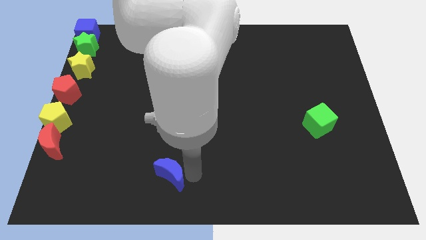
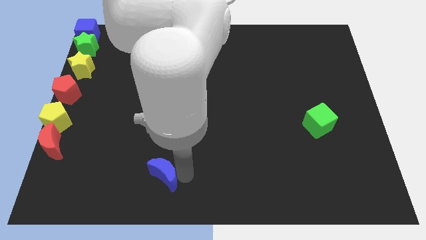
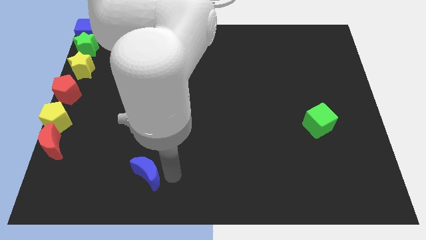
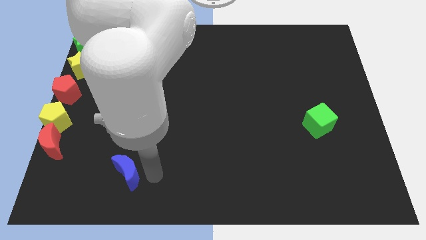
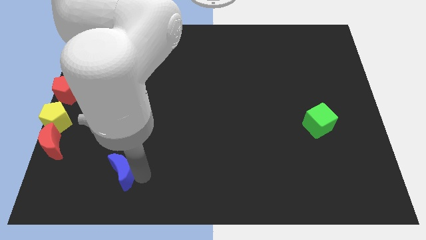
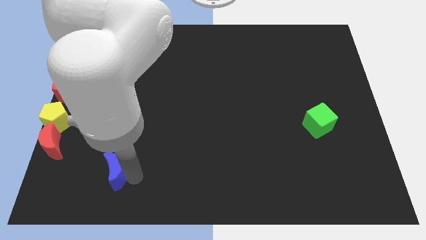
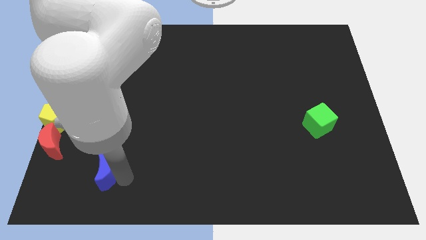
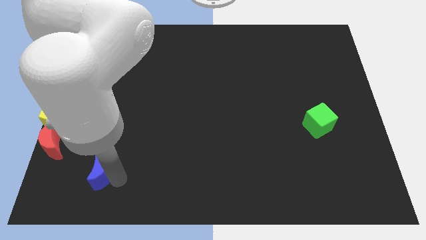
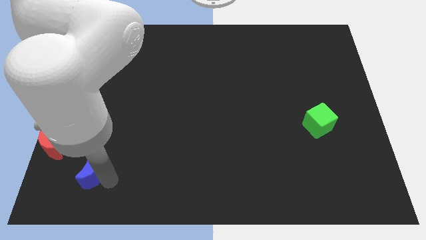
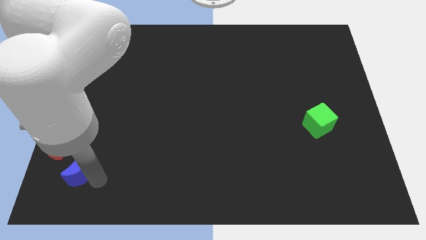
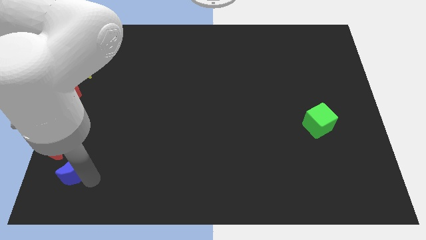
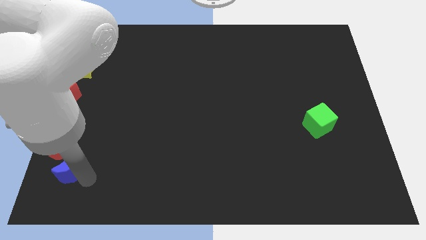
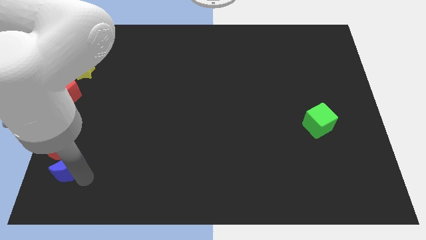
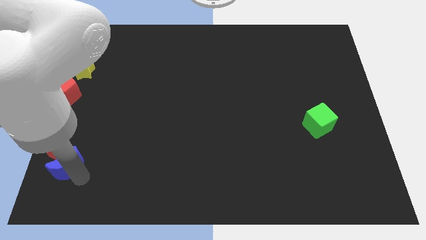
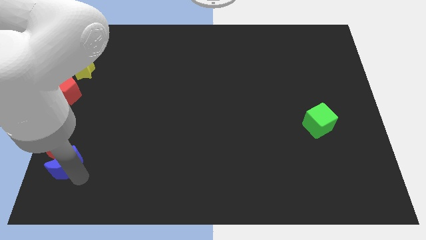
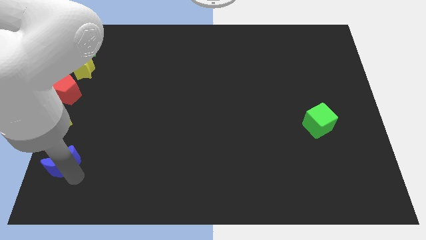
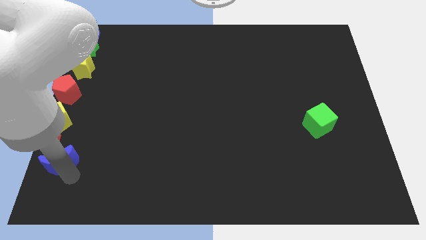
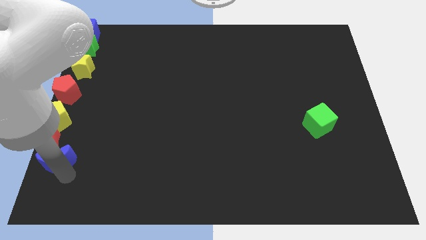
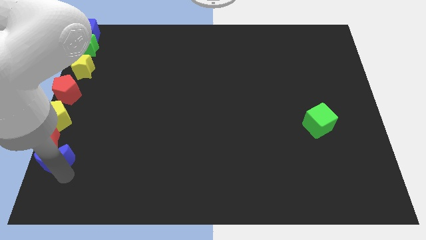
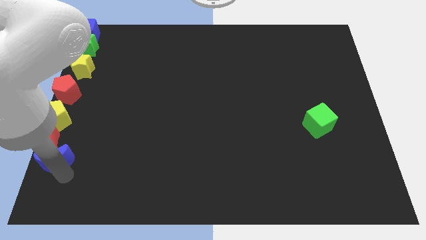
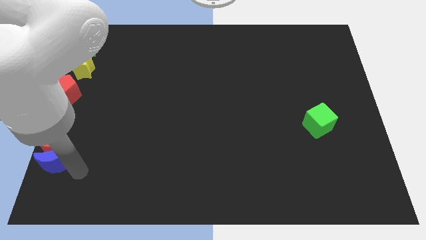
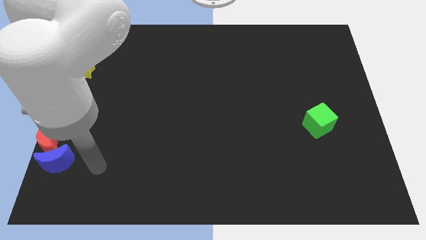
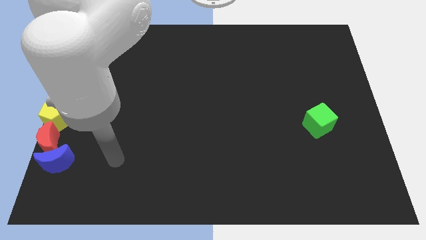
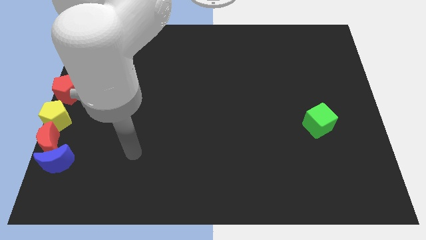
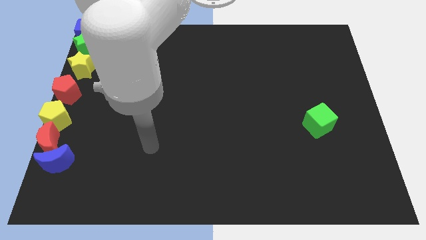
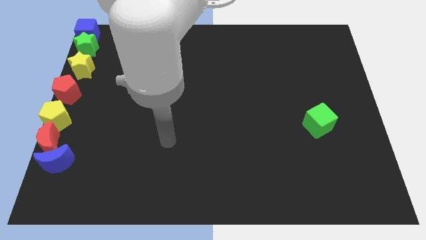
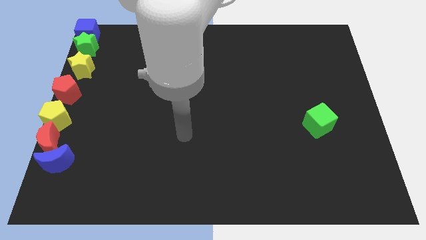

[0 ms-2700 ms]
move the blue moon below the red moon

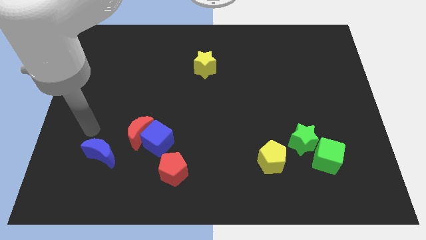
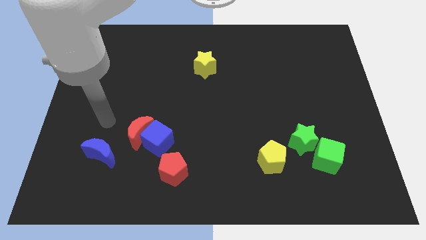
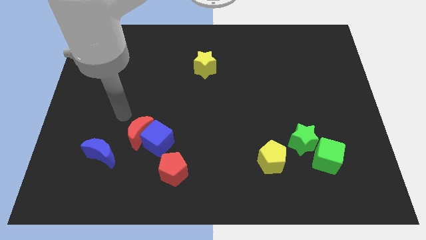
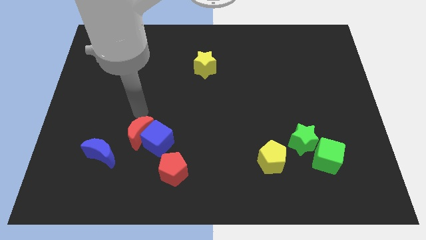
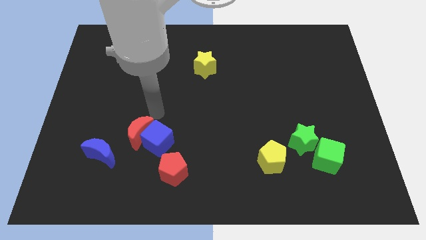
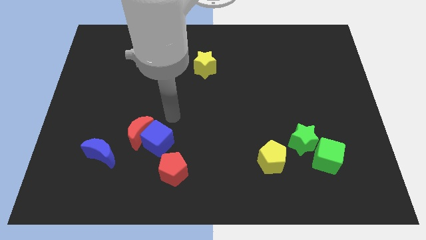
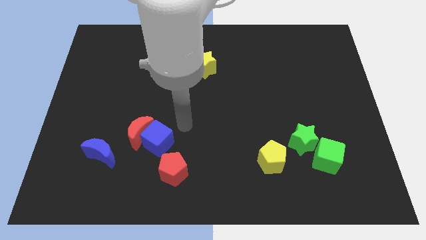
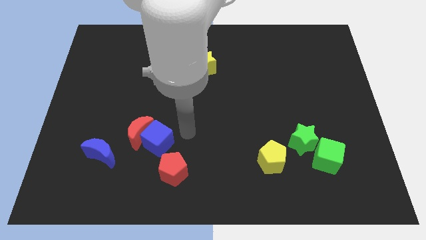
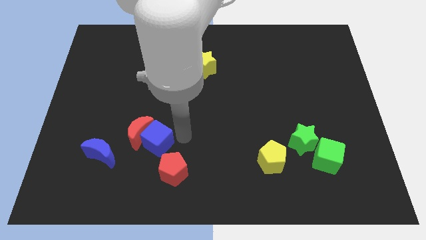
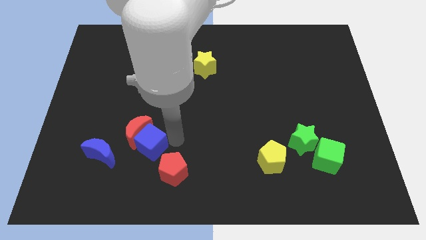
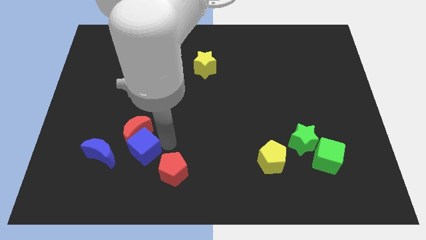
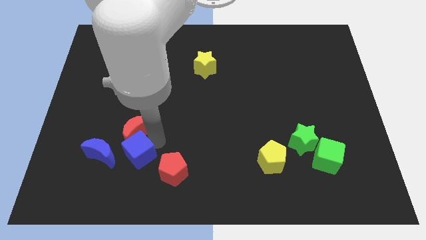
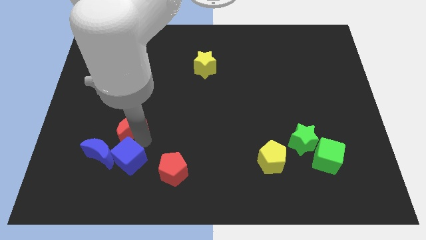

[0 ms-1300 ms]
push the blue cube into the blue crescent

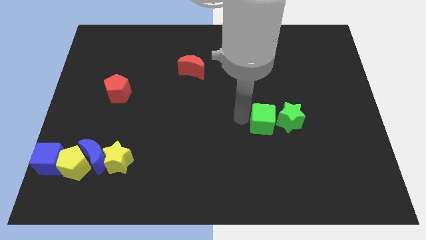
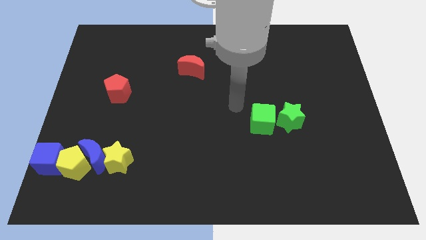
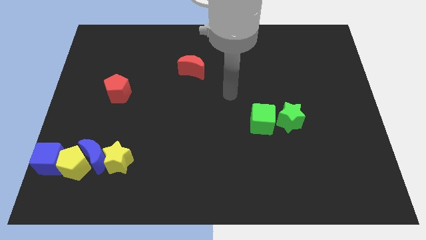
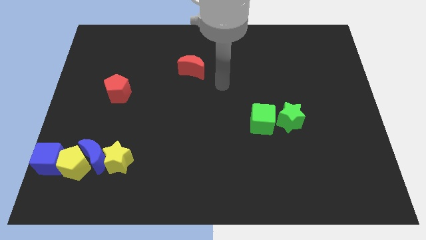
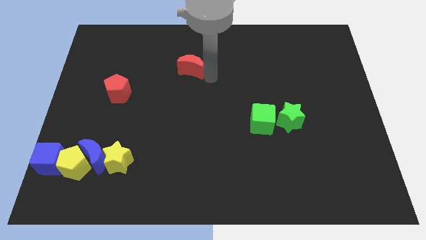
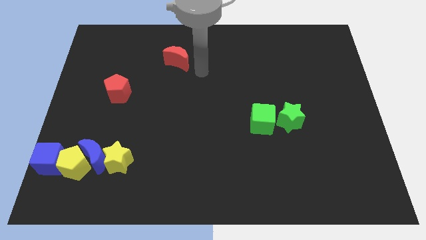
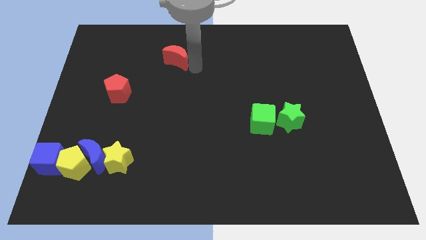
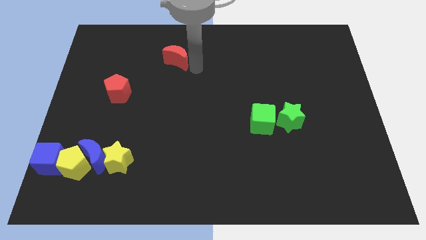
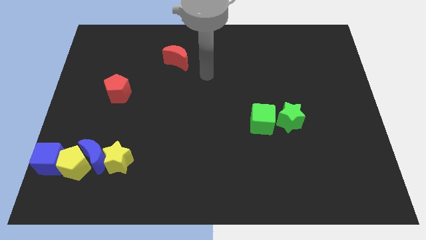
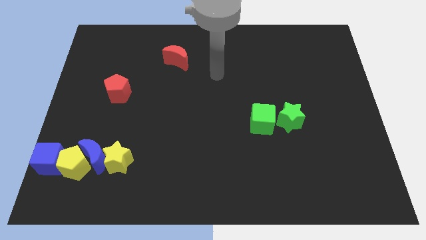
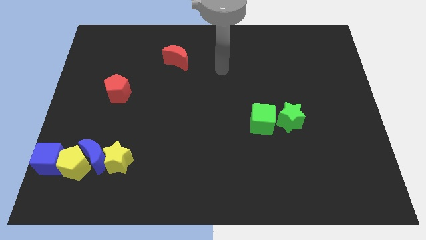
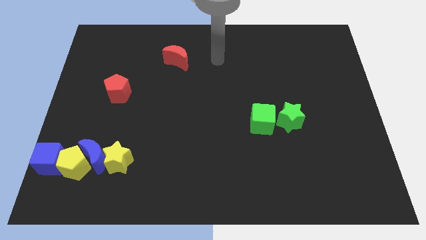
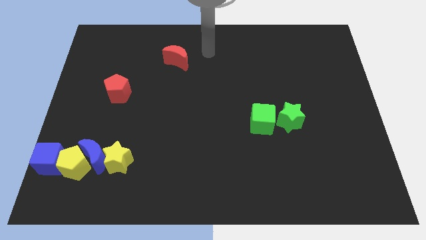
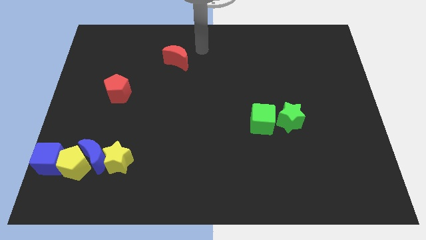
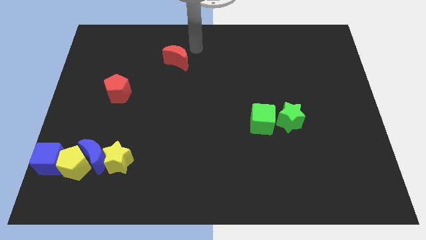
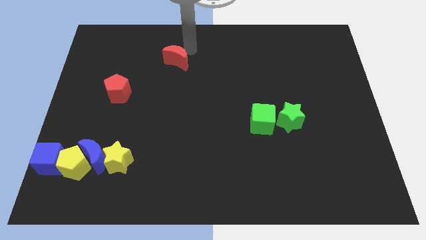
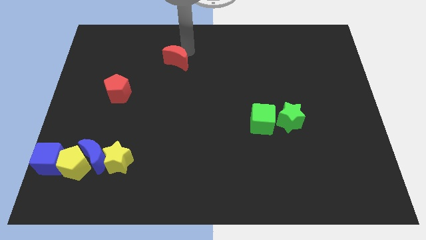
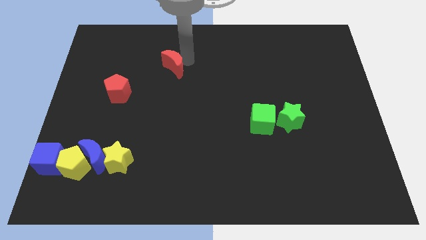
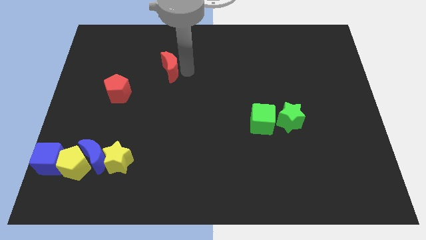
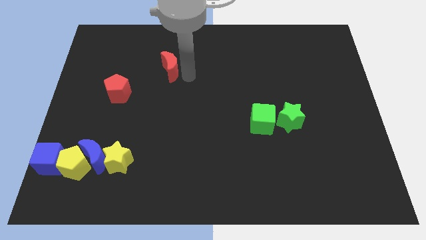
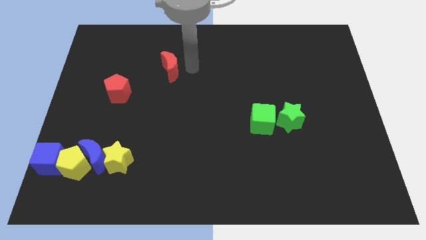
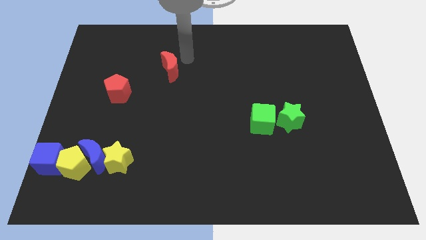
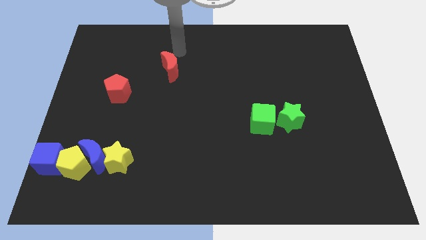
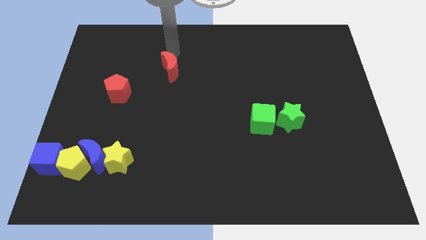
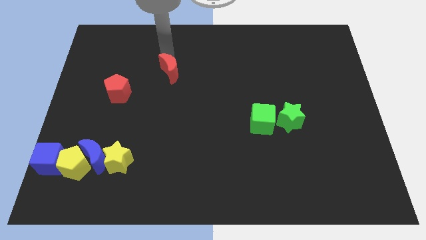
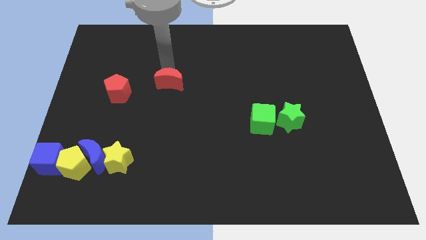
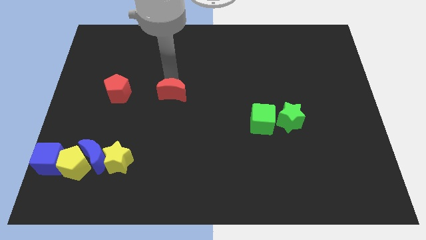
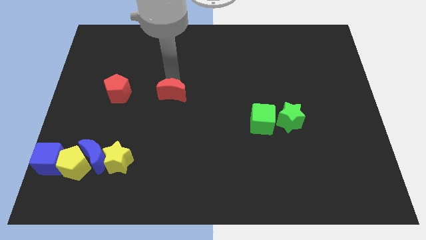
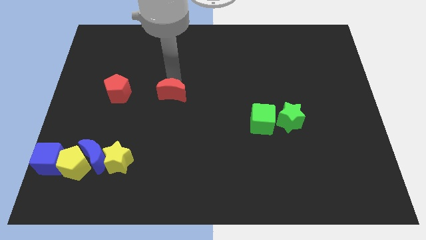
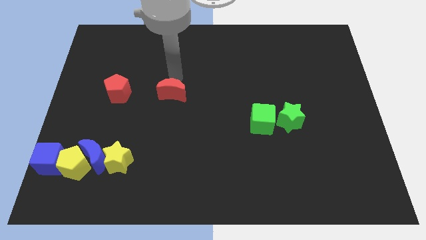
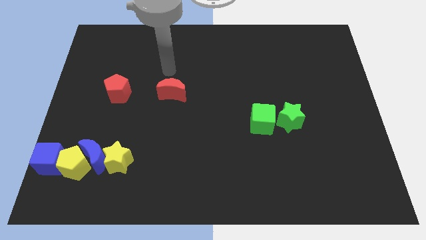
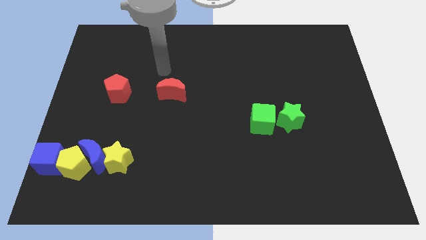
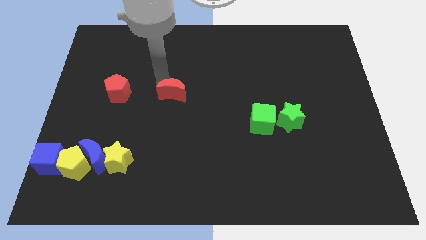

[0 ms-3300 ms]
place red moon parallel to red pentagon

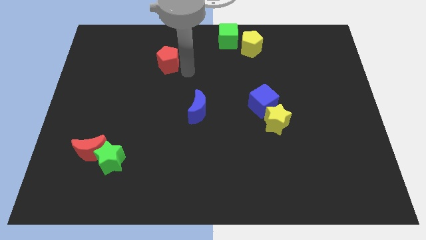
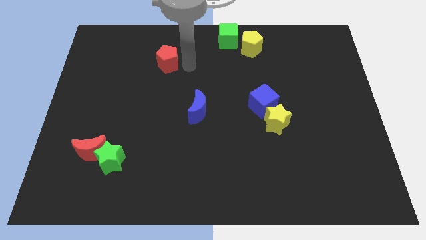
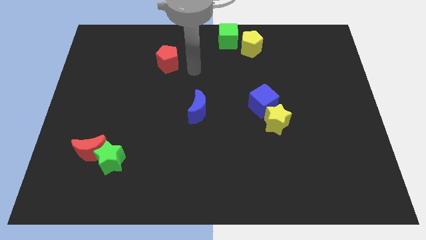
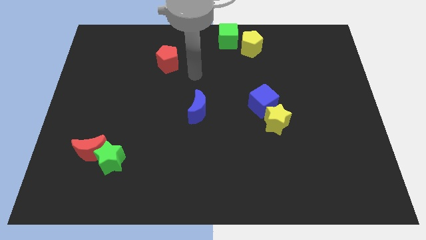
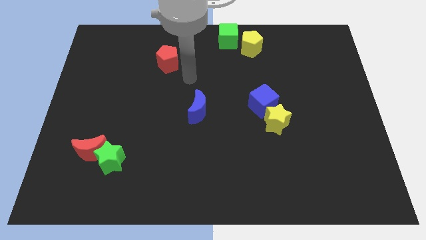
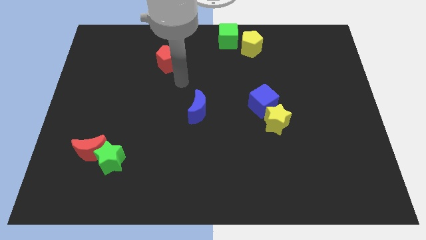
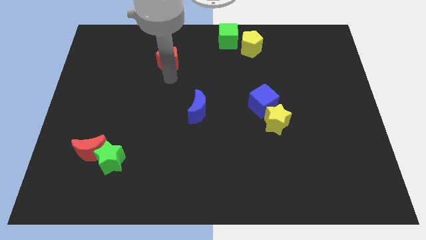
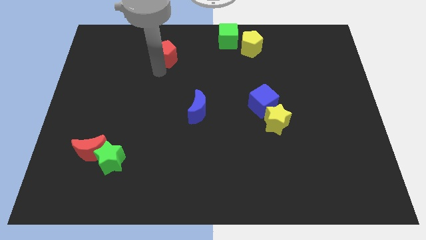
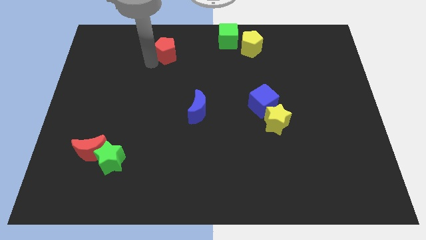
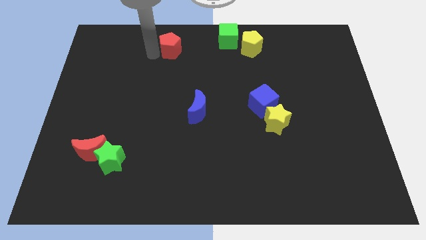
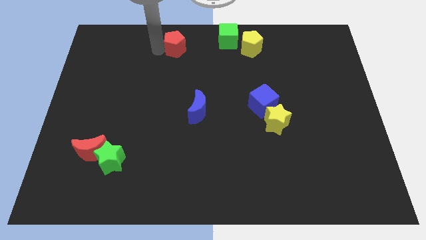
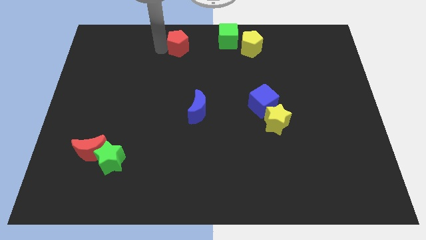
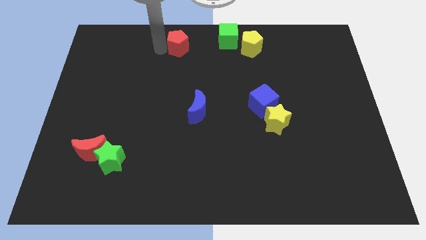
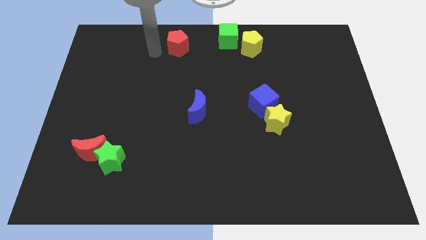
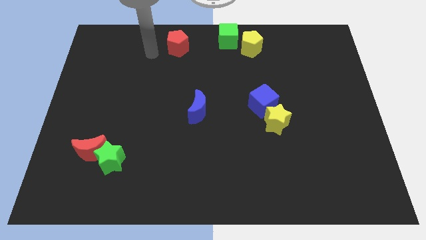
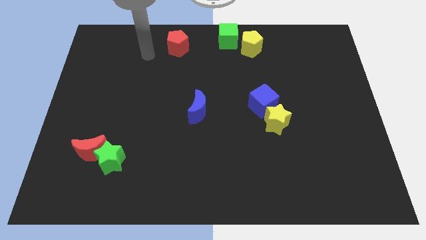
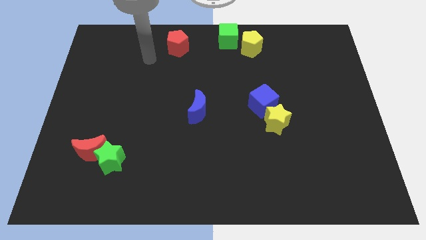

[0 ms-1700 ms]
slide the red pentagon to the top center
